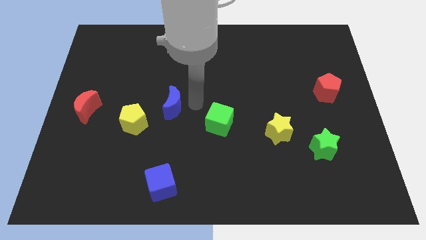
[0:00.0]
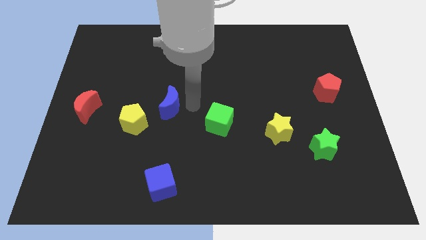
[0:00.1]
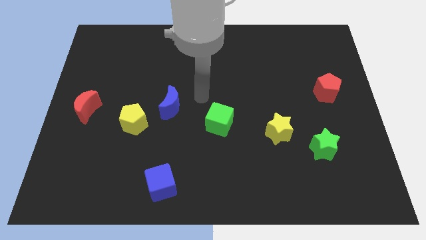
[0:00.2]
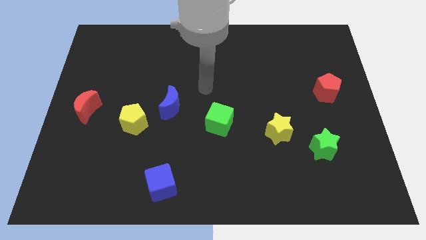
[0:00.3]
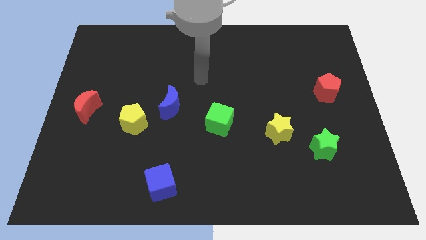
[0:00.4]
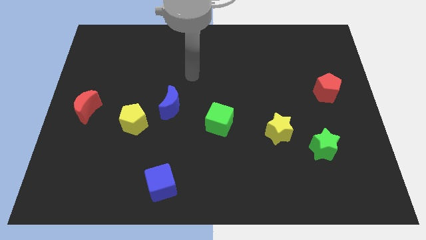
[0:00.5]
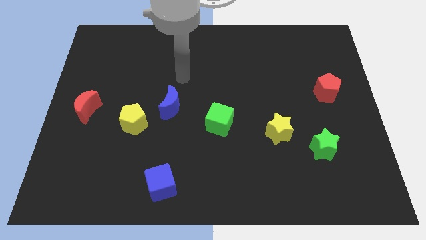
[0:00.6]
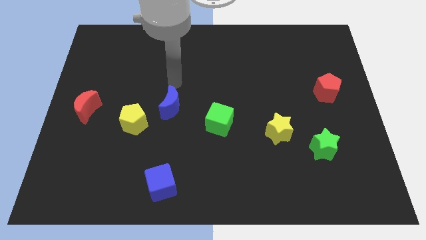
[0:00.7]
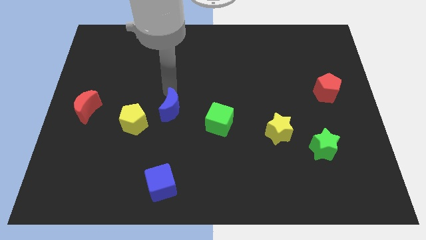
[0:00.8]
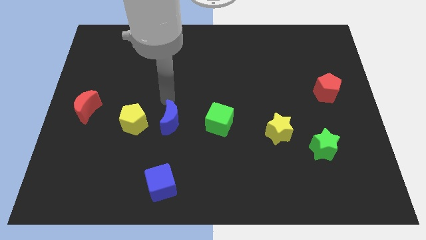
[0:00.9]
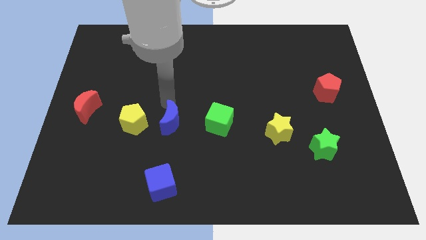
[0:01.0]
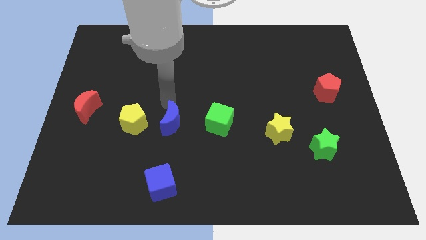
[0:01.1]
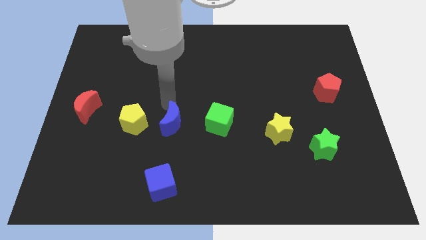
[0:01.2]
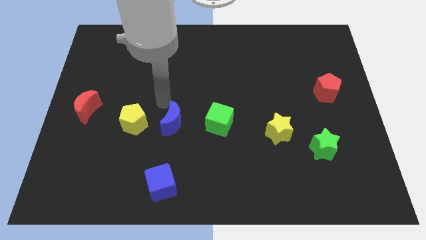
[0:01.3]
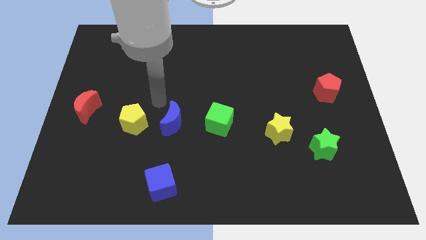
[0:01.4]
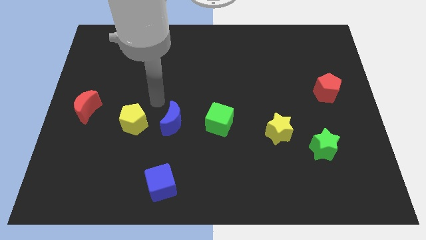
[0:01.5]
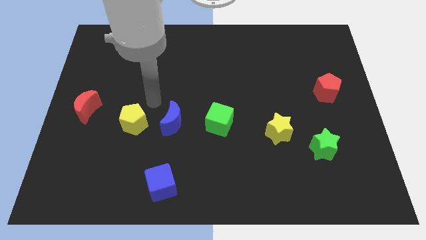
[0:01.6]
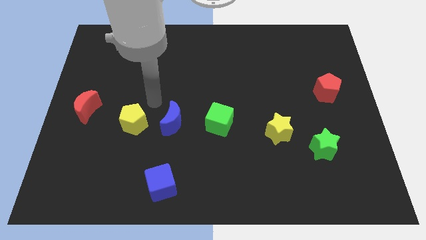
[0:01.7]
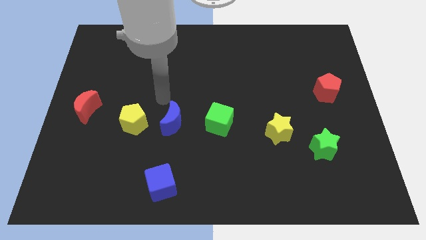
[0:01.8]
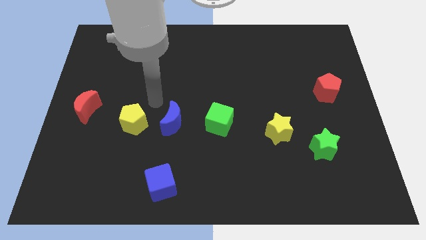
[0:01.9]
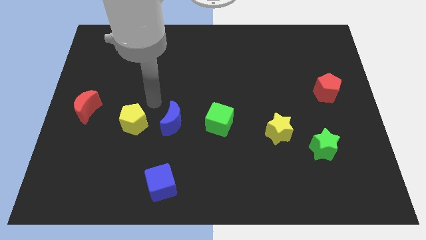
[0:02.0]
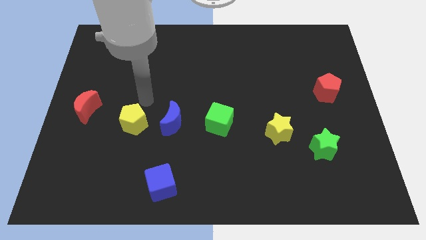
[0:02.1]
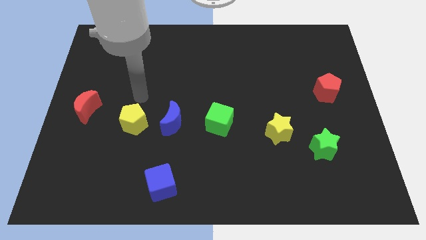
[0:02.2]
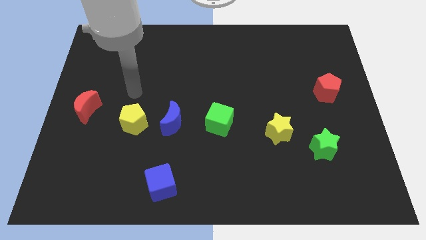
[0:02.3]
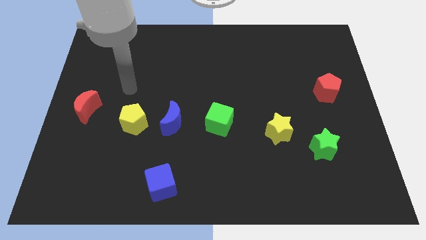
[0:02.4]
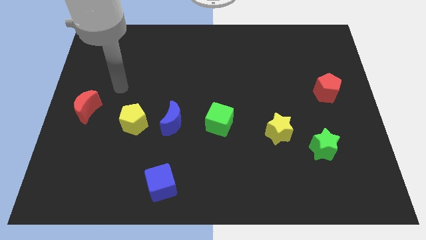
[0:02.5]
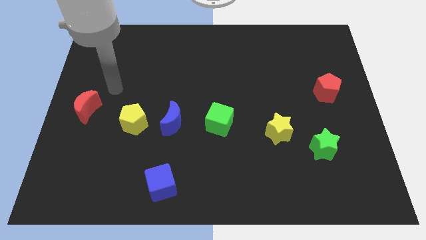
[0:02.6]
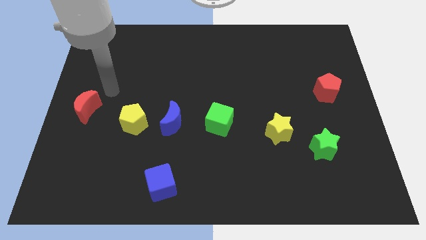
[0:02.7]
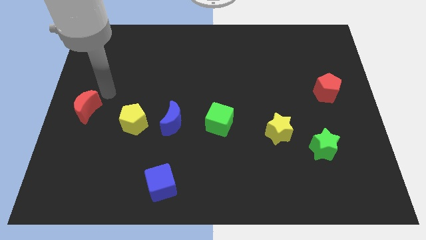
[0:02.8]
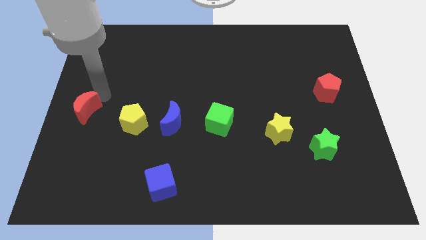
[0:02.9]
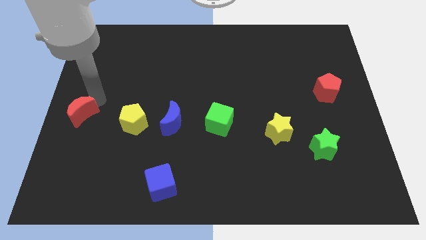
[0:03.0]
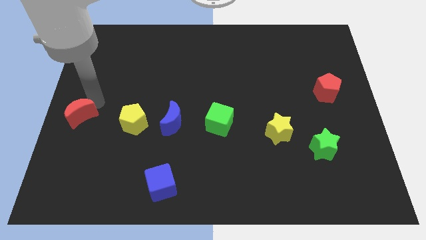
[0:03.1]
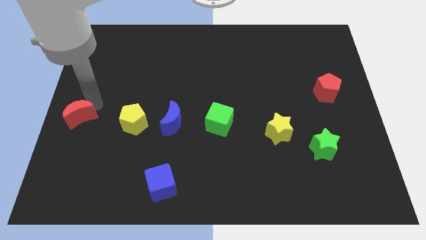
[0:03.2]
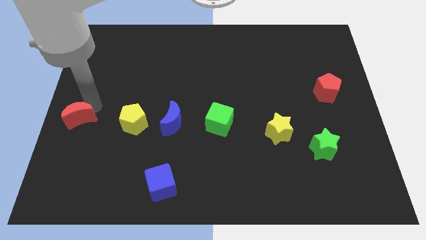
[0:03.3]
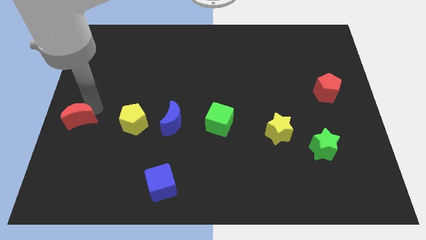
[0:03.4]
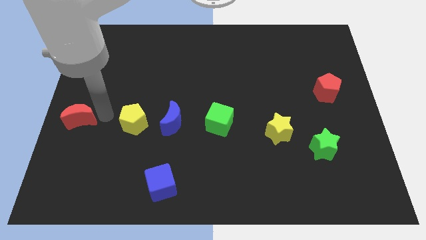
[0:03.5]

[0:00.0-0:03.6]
push red moon to the left of yellow pentagon to form a horizontal line

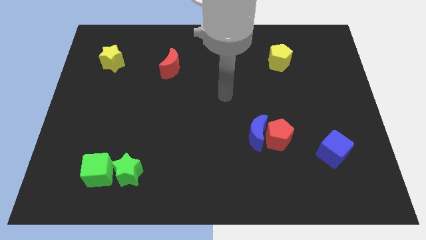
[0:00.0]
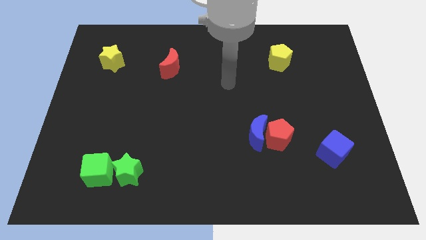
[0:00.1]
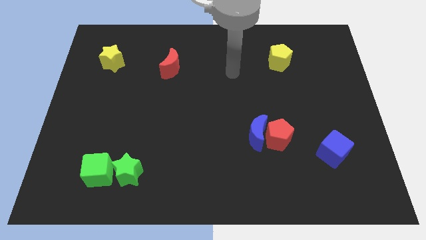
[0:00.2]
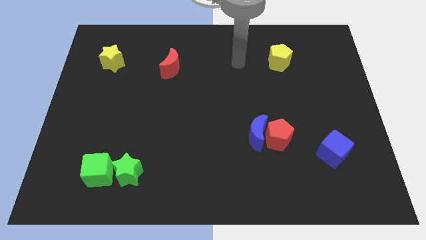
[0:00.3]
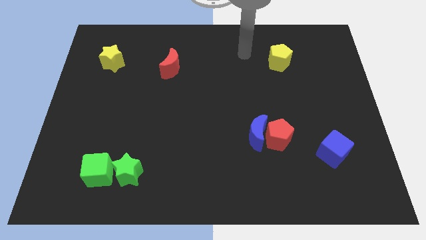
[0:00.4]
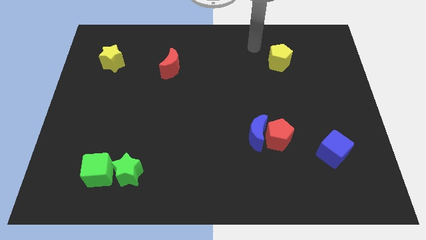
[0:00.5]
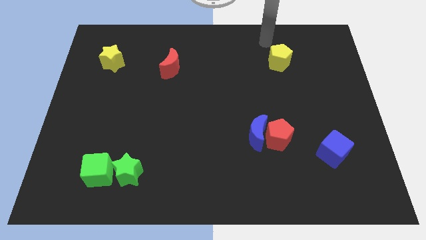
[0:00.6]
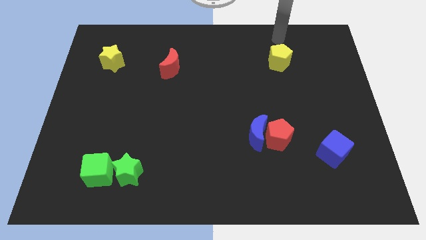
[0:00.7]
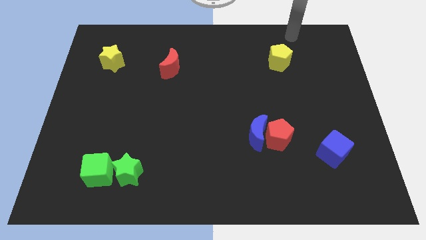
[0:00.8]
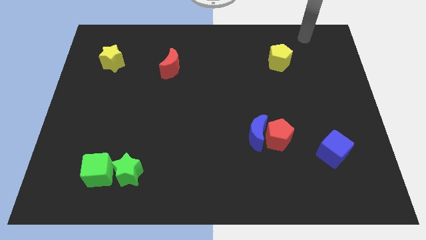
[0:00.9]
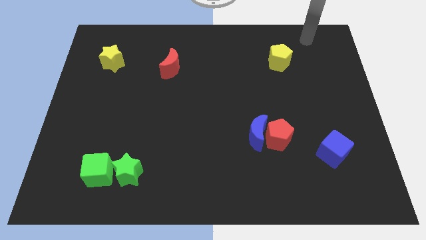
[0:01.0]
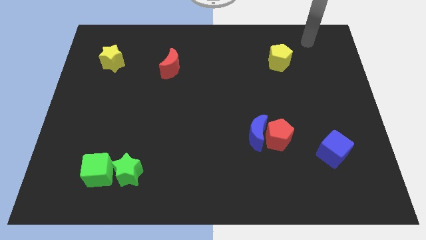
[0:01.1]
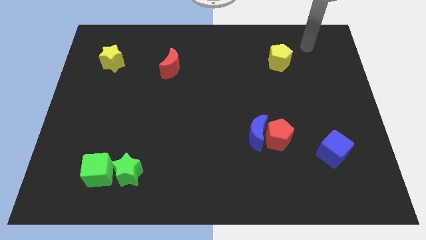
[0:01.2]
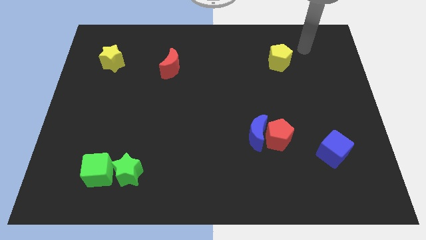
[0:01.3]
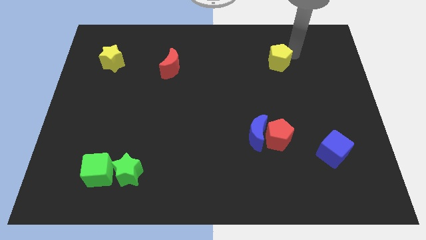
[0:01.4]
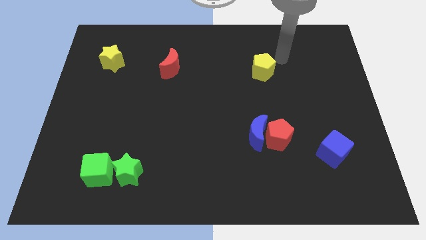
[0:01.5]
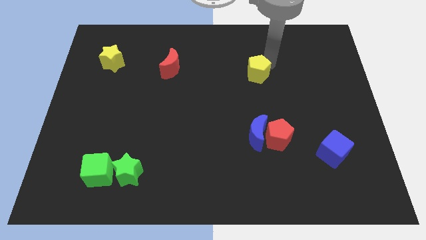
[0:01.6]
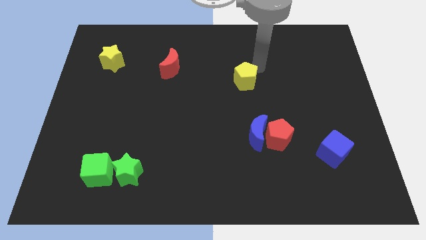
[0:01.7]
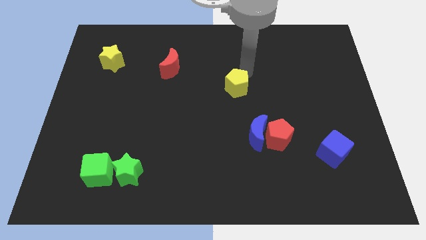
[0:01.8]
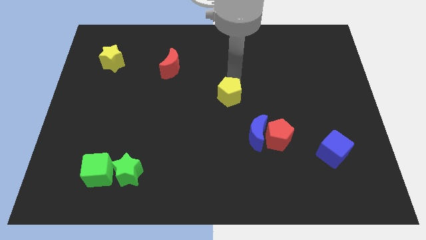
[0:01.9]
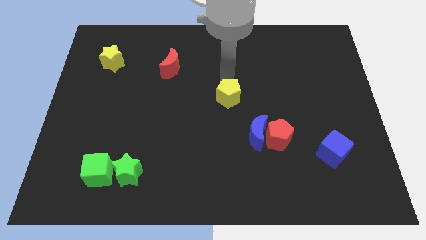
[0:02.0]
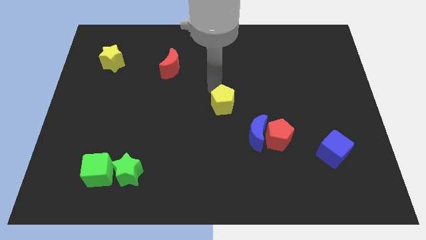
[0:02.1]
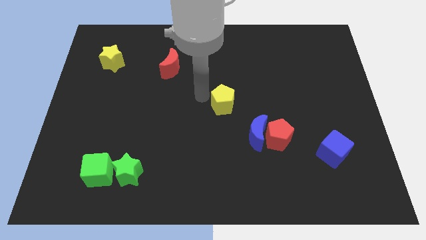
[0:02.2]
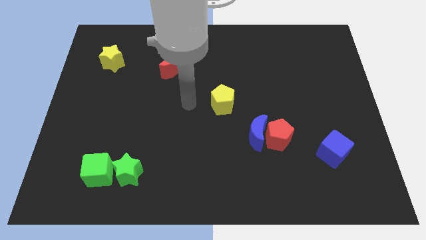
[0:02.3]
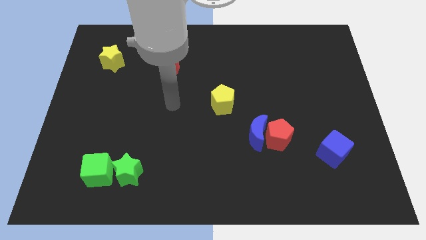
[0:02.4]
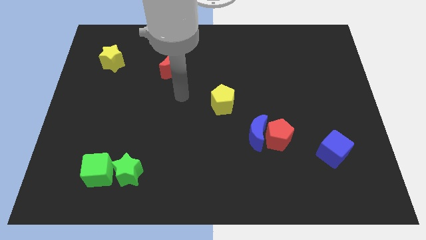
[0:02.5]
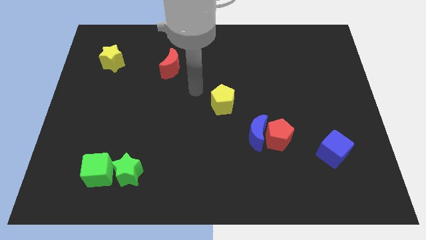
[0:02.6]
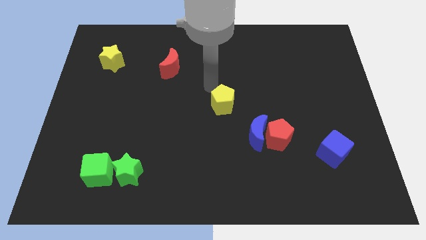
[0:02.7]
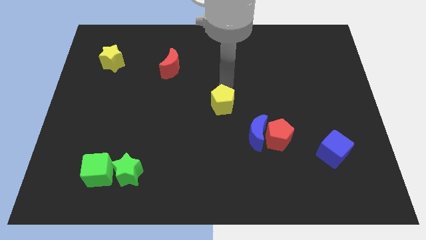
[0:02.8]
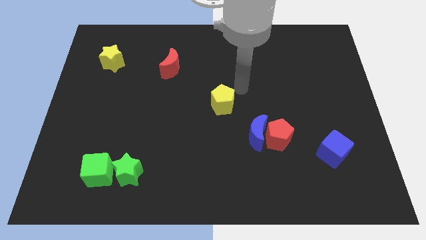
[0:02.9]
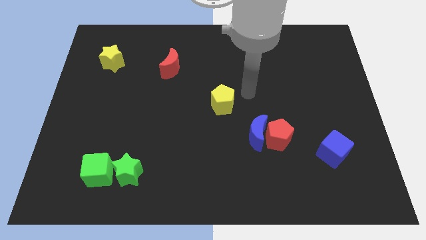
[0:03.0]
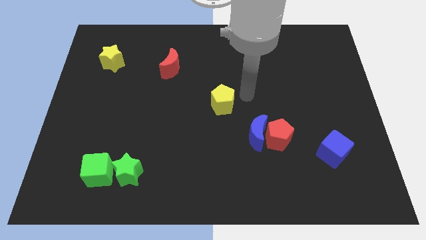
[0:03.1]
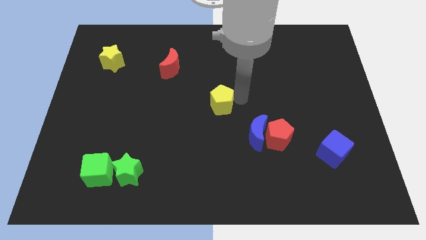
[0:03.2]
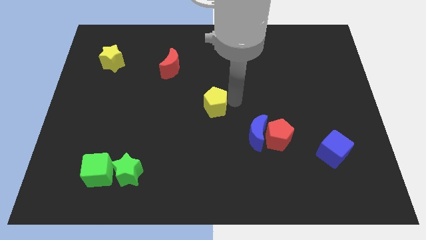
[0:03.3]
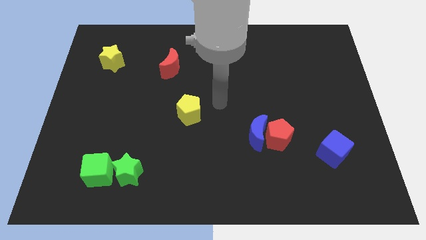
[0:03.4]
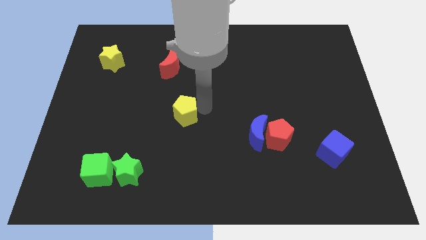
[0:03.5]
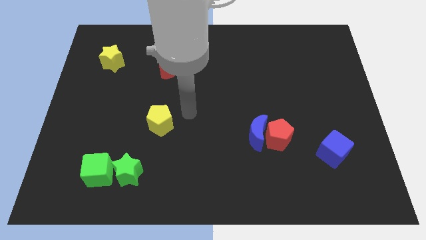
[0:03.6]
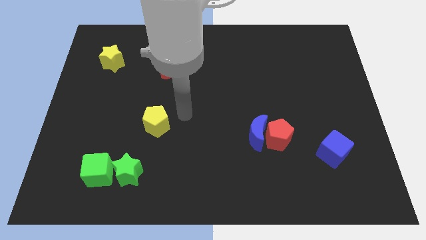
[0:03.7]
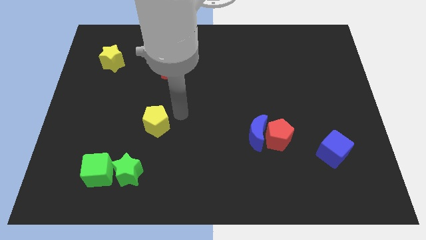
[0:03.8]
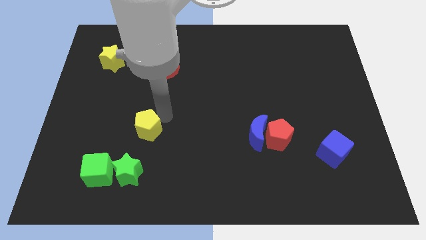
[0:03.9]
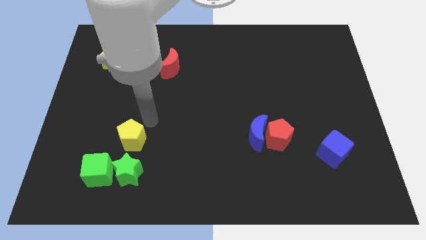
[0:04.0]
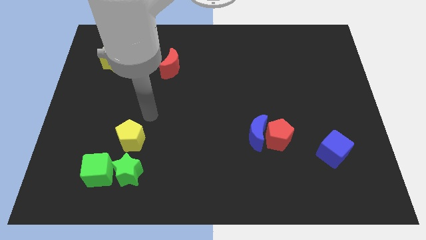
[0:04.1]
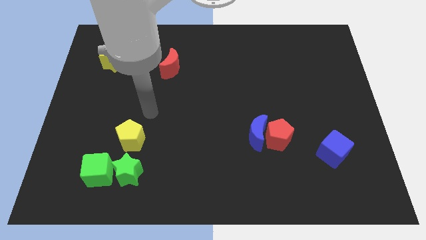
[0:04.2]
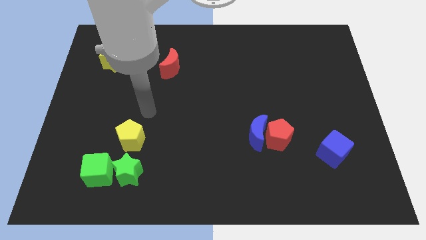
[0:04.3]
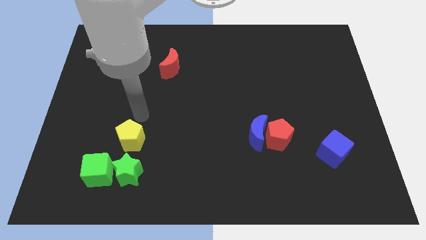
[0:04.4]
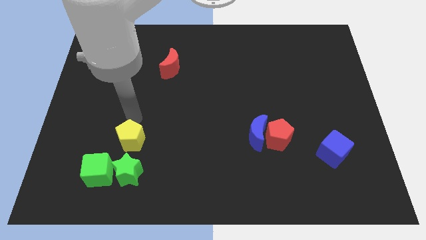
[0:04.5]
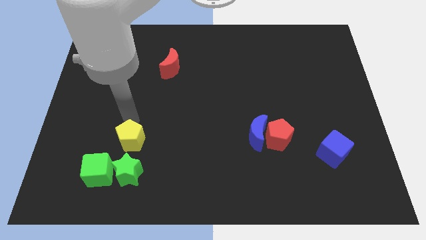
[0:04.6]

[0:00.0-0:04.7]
place the yellow pentagon above the green star

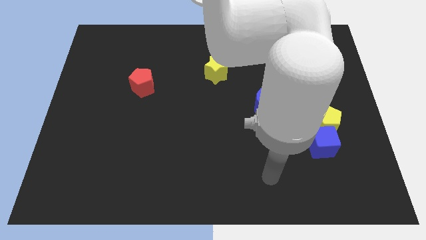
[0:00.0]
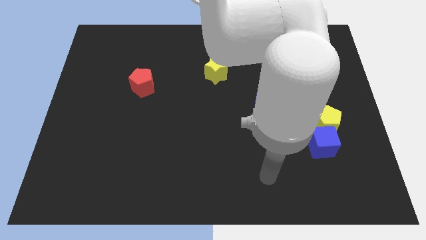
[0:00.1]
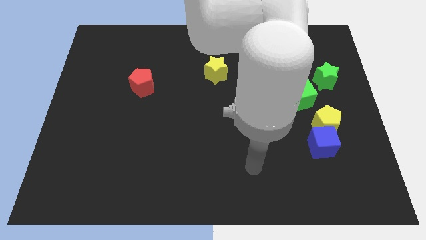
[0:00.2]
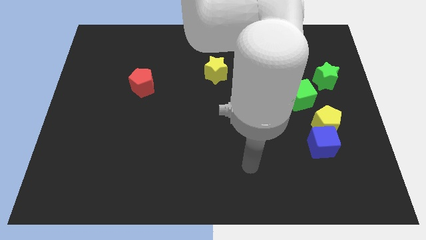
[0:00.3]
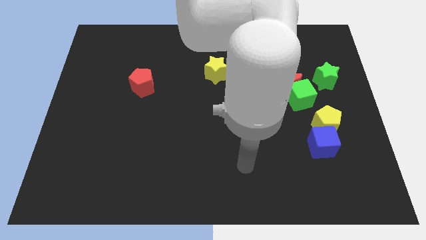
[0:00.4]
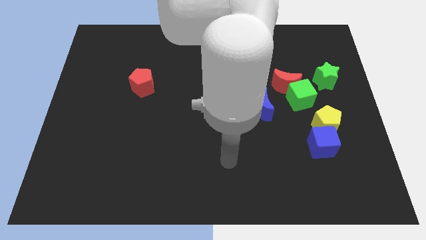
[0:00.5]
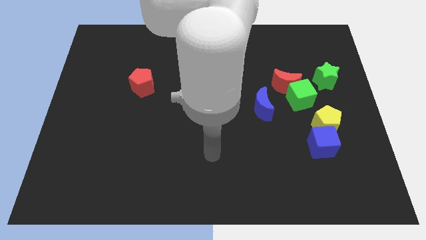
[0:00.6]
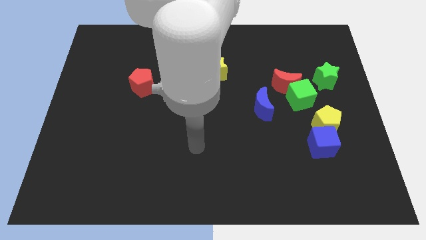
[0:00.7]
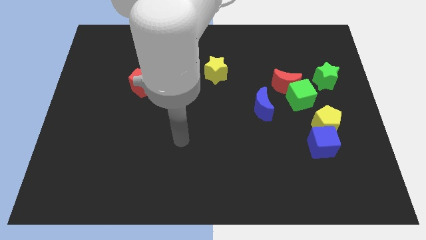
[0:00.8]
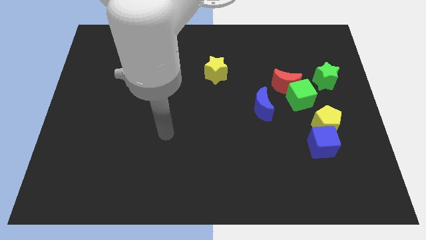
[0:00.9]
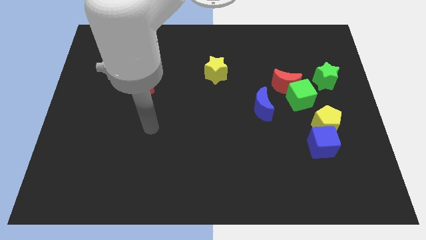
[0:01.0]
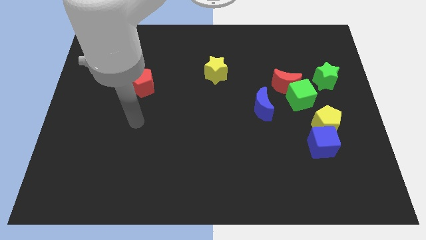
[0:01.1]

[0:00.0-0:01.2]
move your arm to the bottom side of the red pentagon
